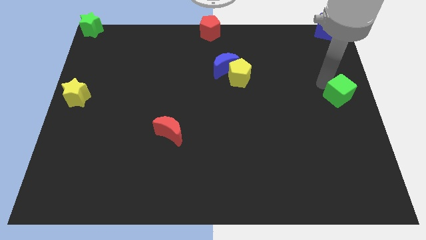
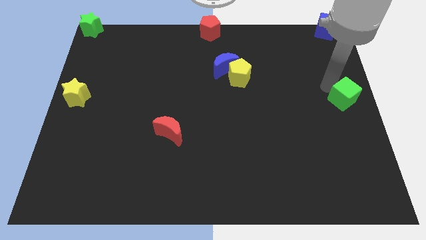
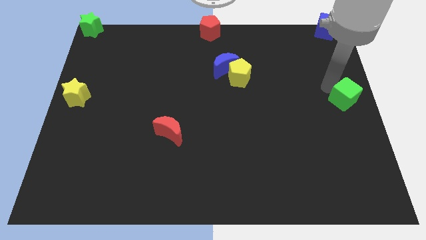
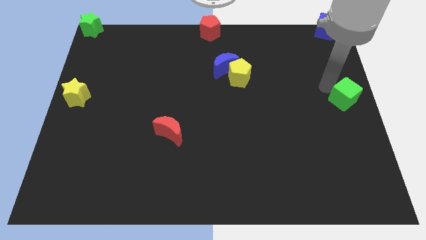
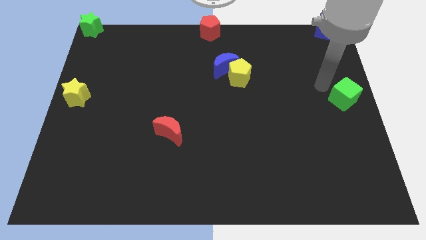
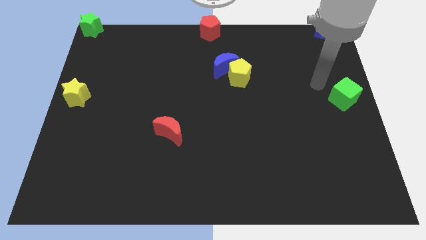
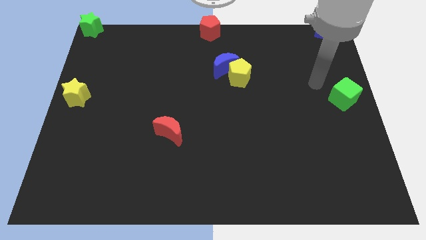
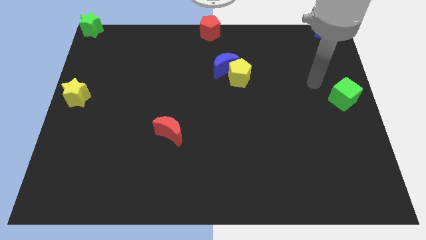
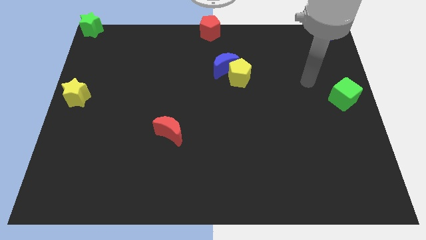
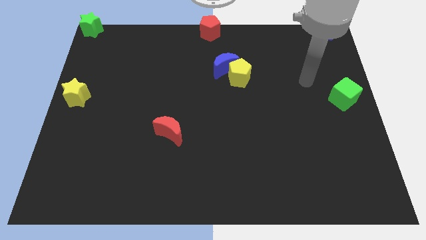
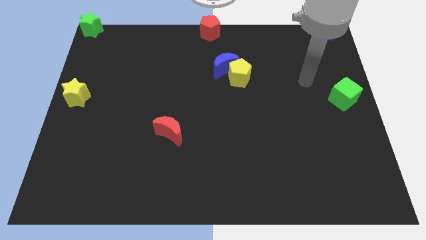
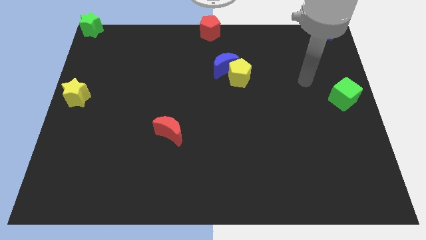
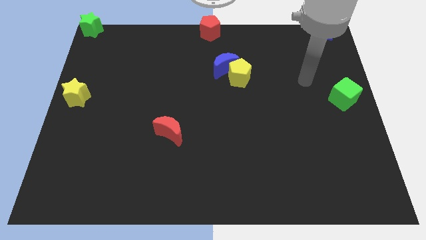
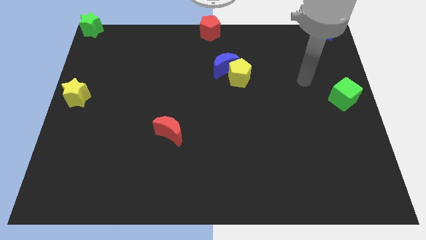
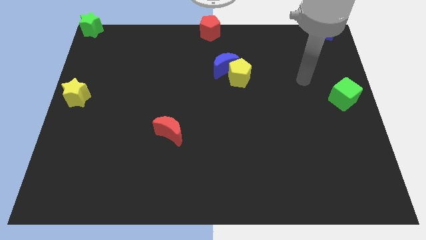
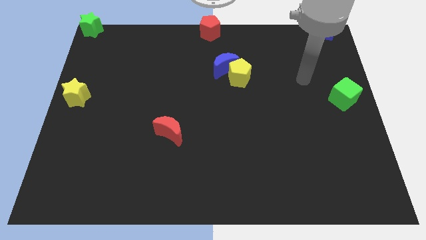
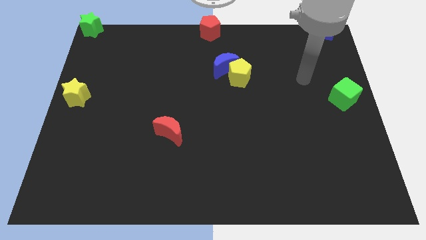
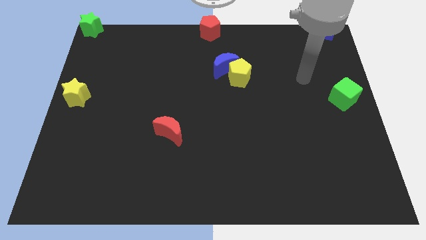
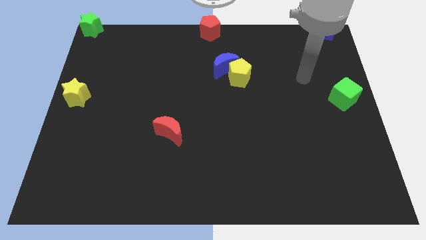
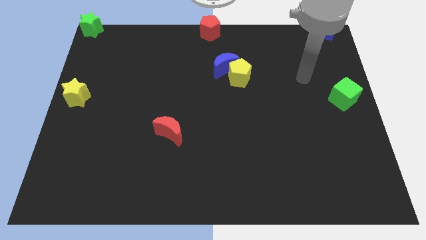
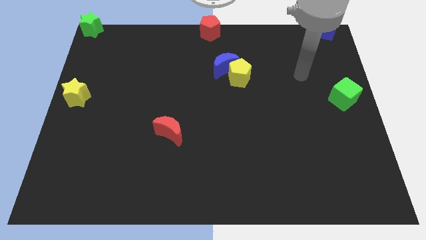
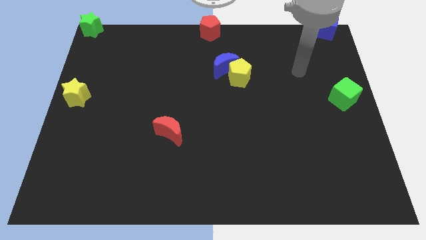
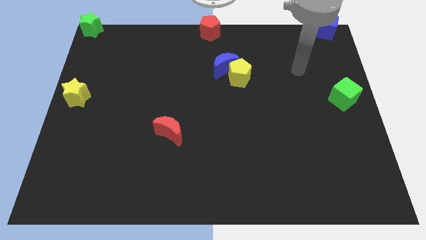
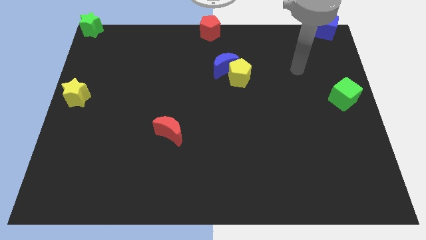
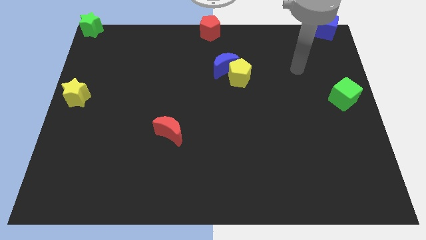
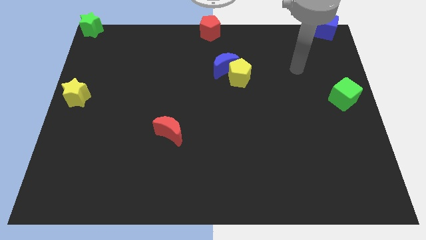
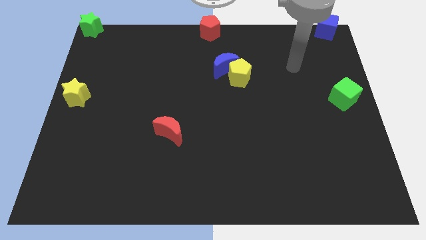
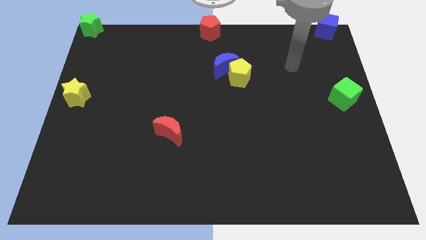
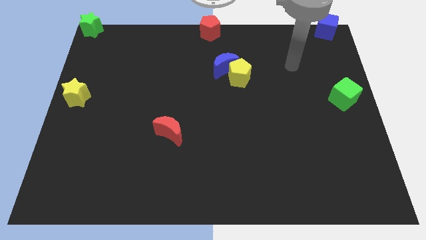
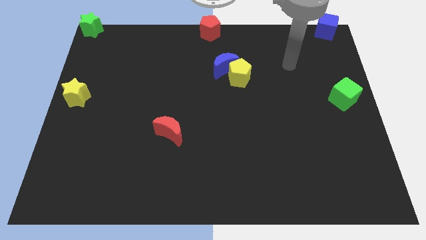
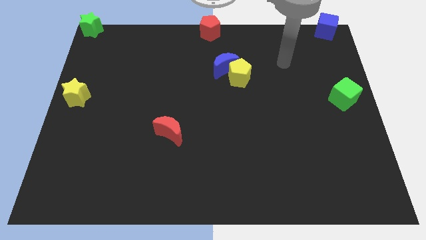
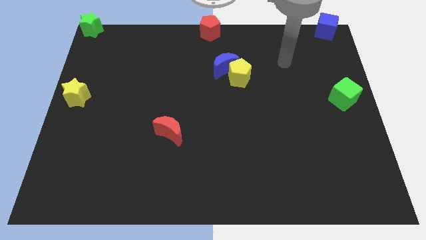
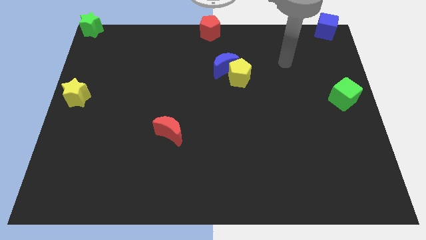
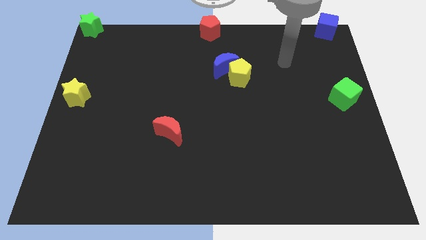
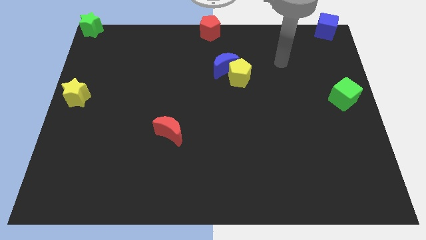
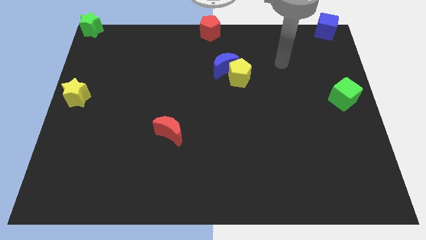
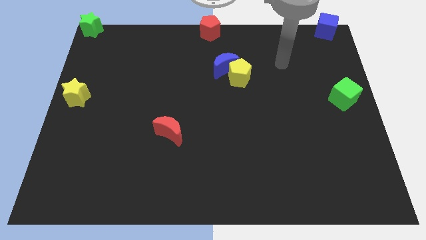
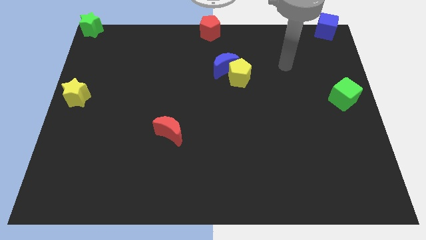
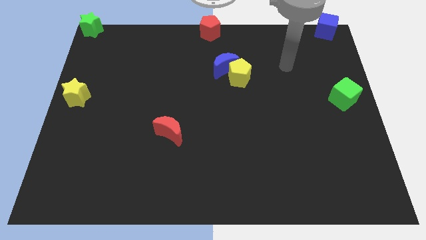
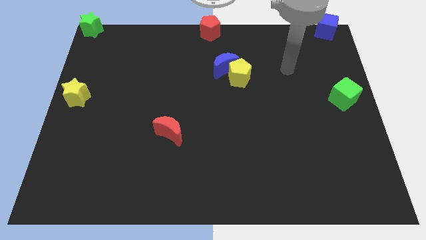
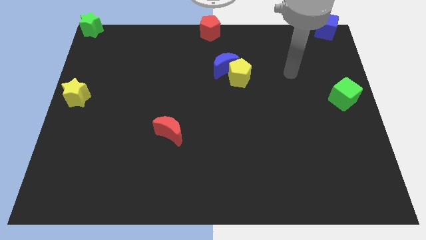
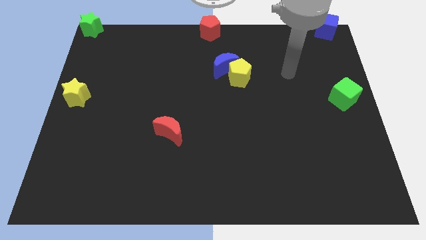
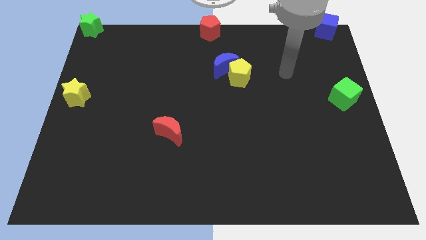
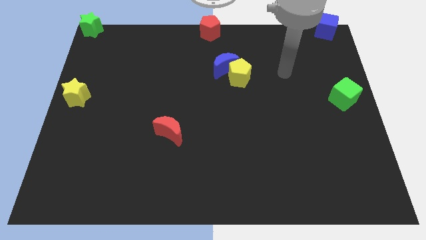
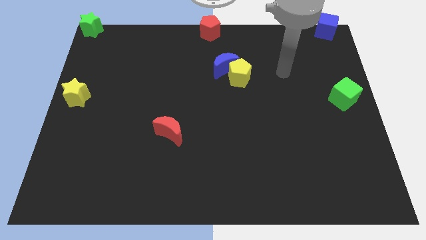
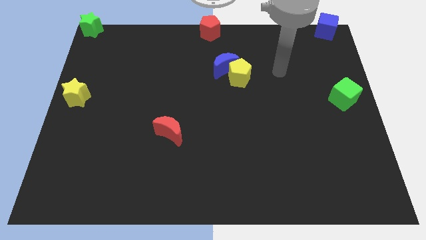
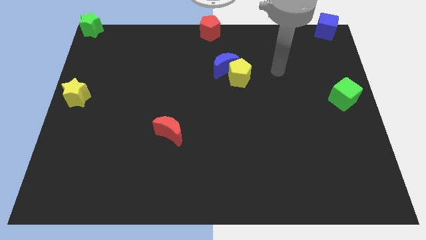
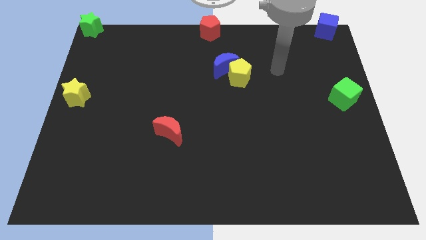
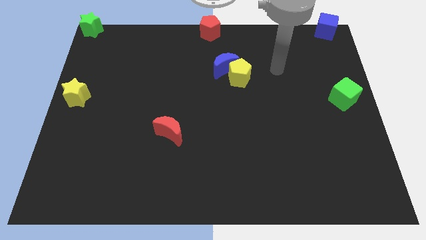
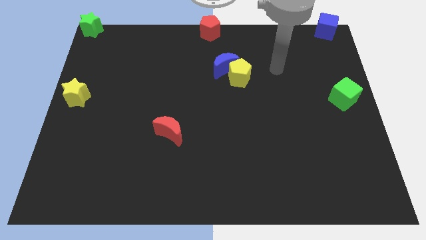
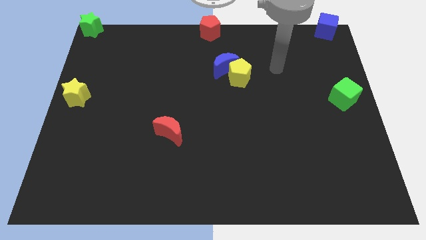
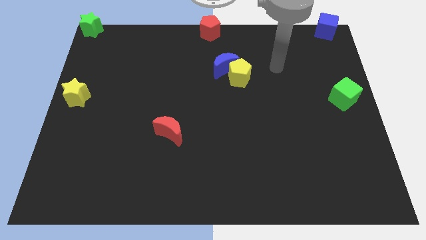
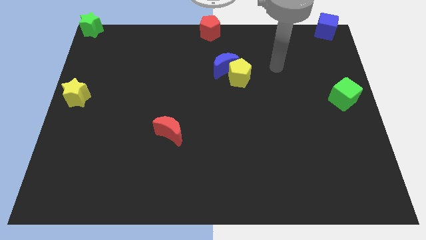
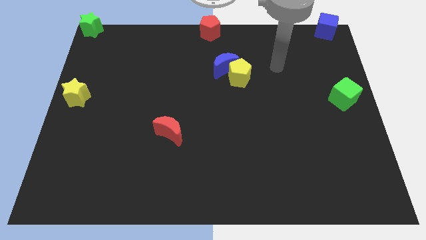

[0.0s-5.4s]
move the arm away from the green cube

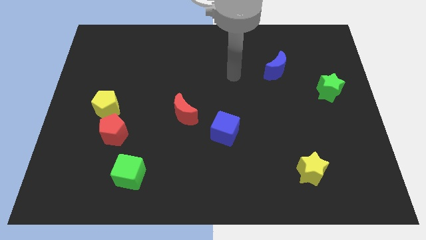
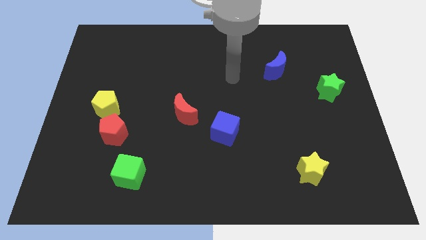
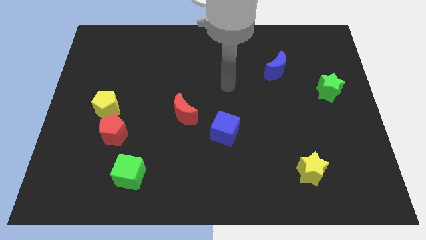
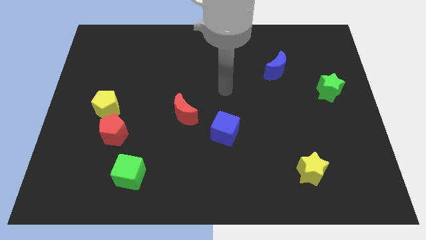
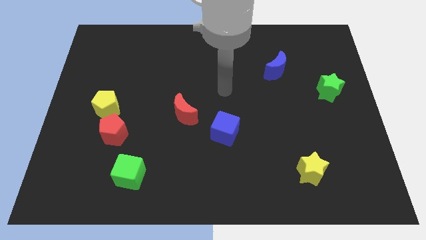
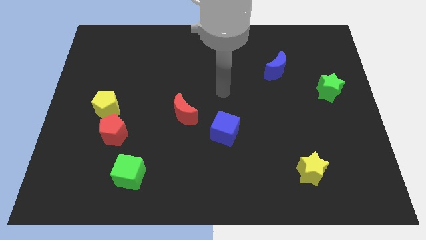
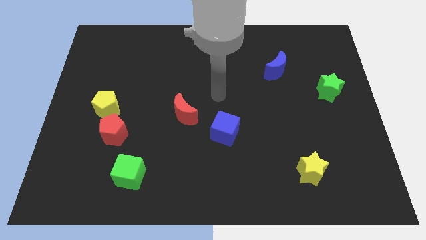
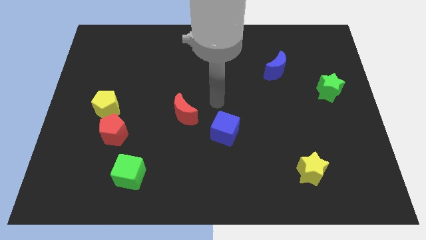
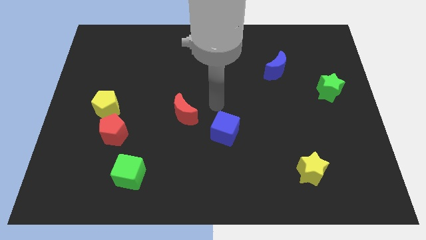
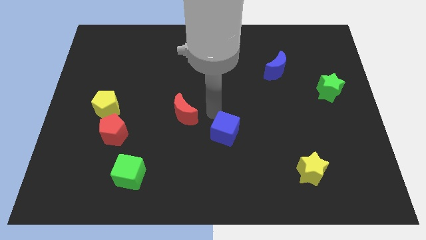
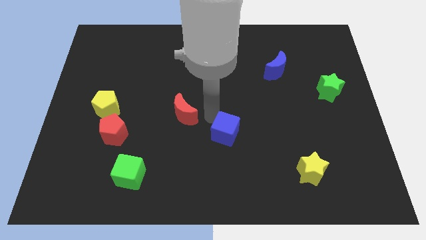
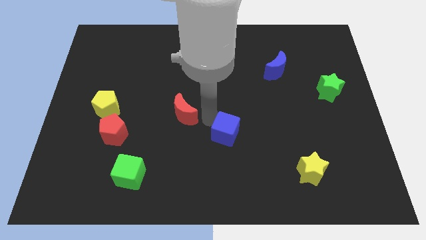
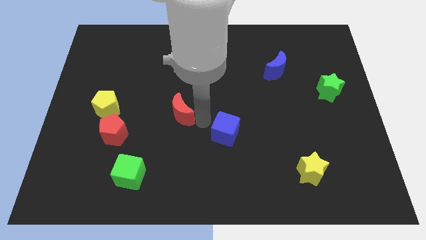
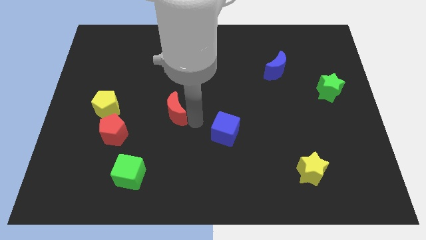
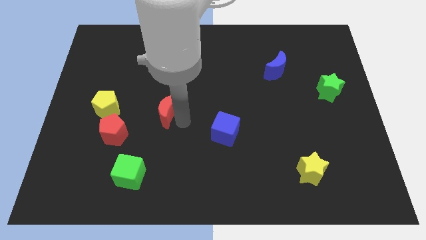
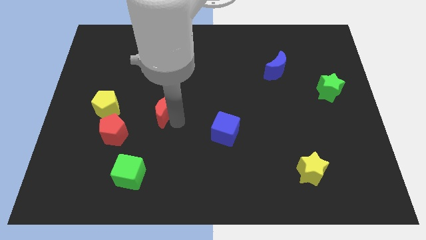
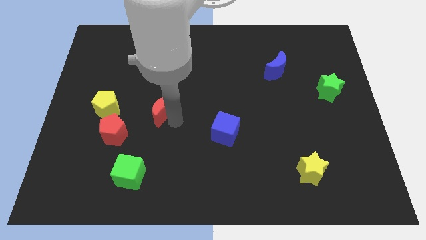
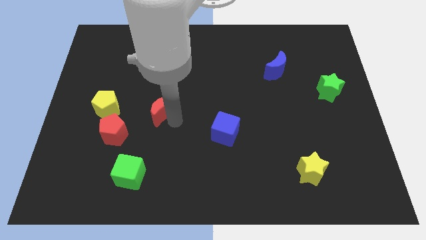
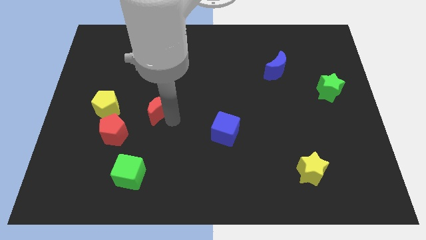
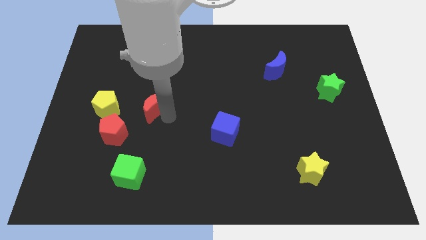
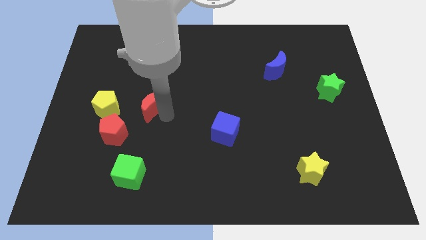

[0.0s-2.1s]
move the red moon towards right of the red pentagon

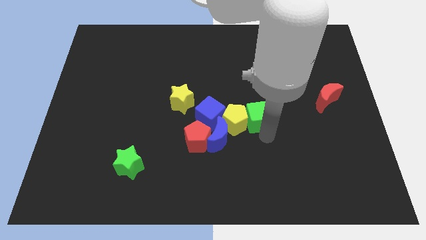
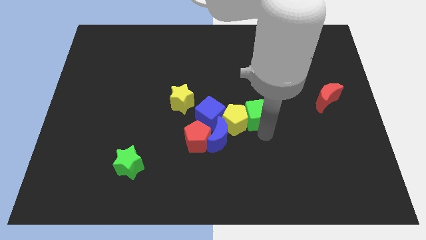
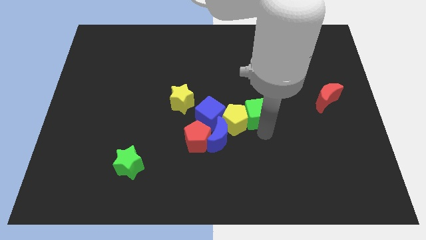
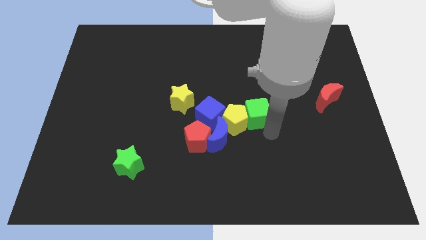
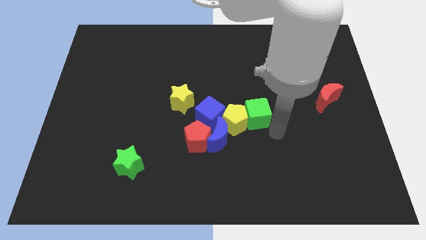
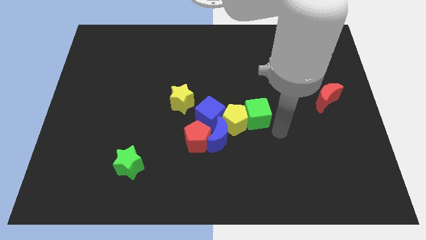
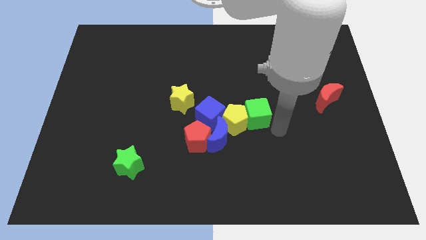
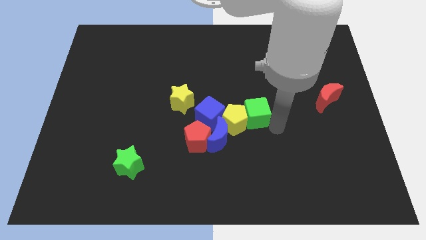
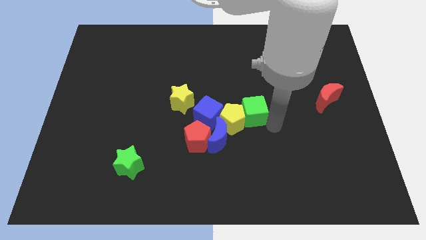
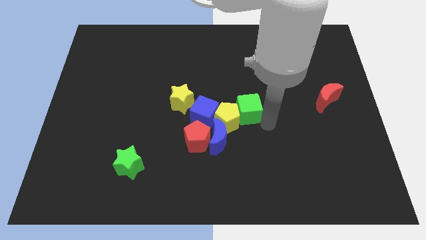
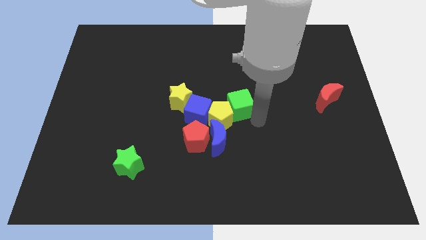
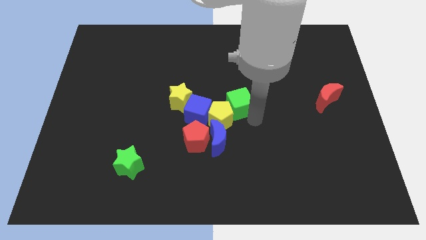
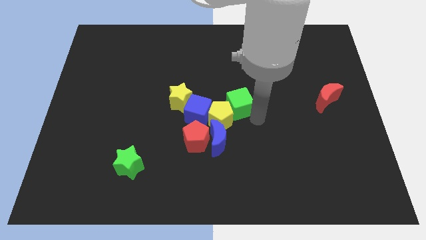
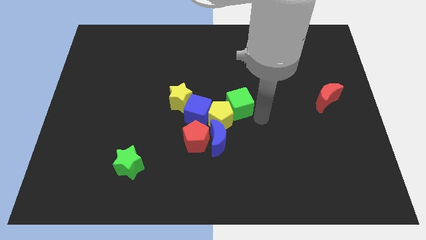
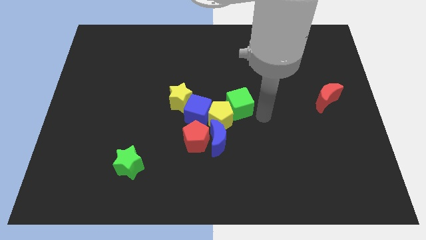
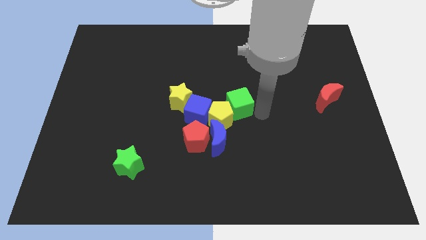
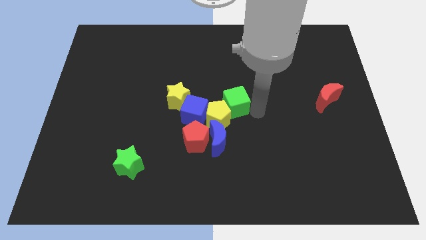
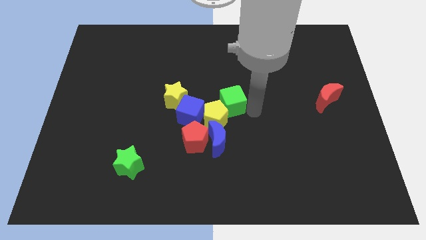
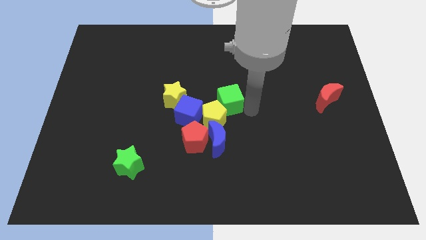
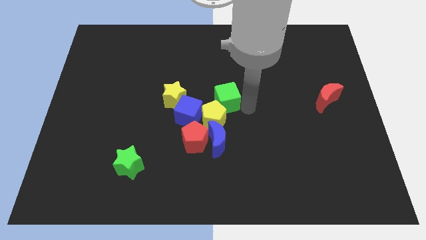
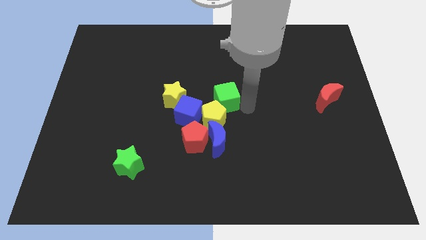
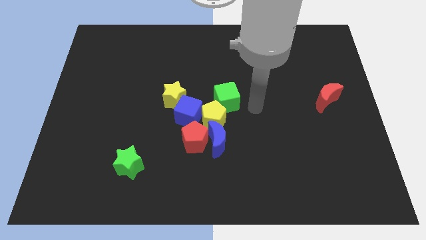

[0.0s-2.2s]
push the green cube to the top of the yellow pentagon
